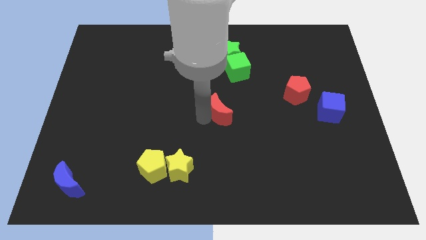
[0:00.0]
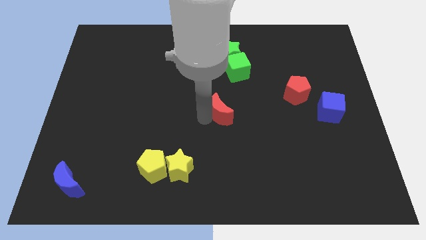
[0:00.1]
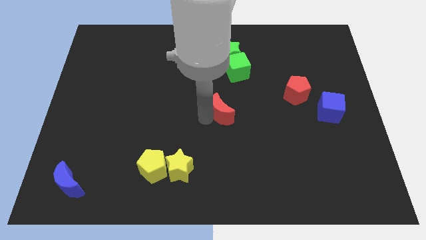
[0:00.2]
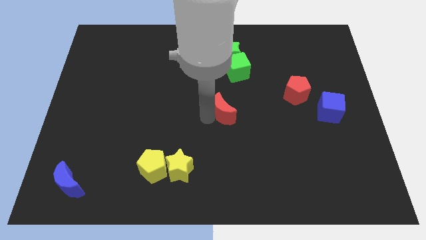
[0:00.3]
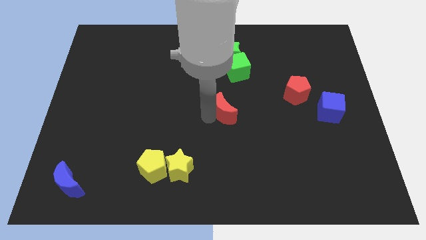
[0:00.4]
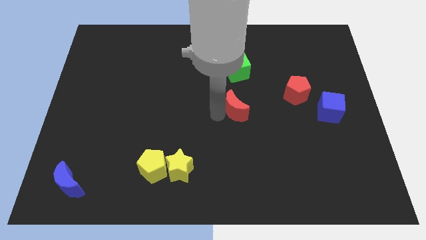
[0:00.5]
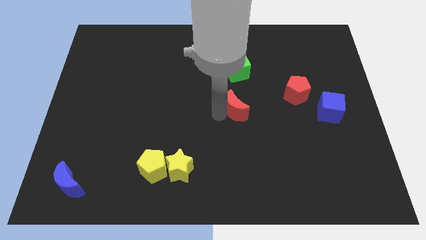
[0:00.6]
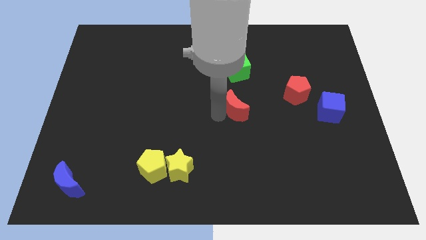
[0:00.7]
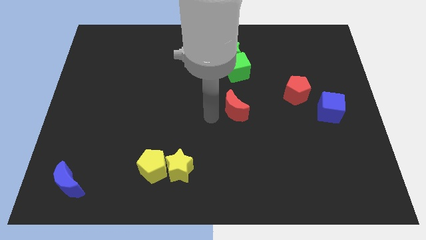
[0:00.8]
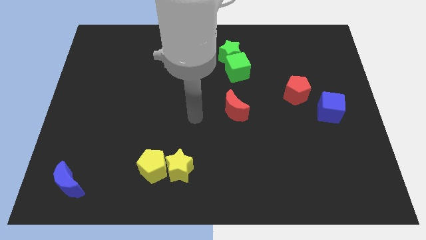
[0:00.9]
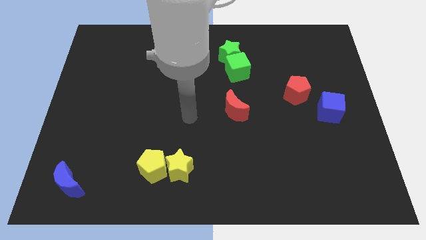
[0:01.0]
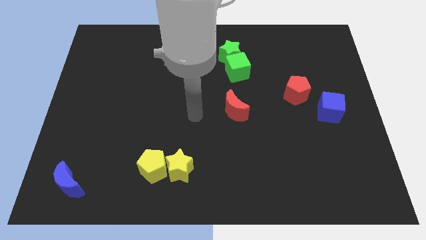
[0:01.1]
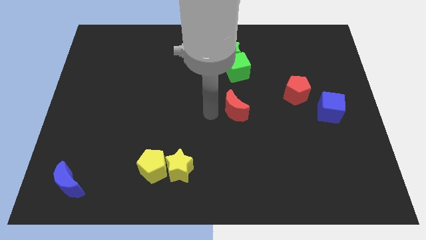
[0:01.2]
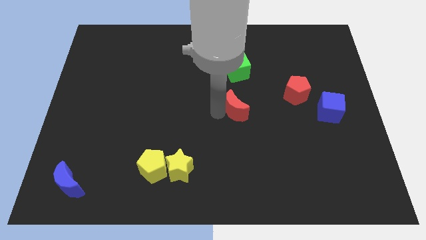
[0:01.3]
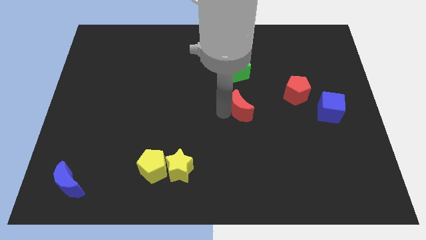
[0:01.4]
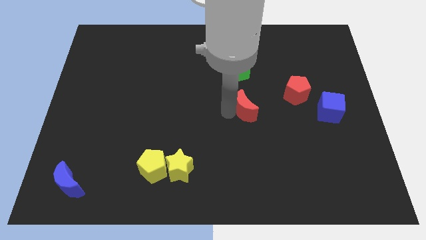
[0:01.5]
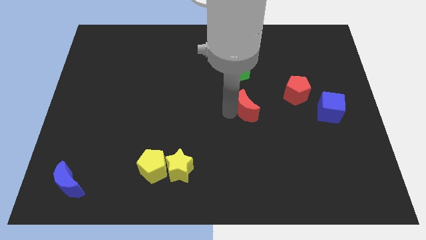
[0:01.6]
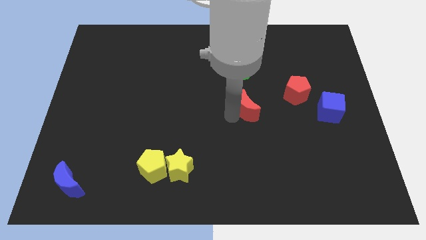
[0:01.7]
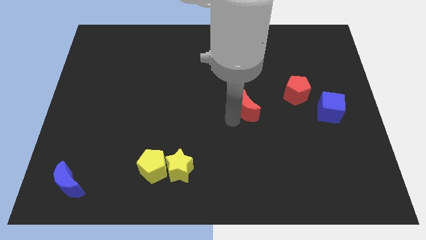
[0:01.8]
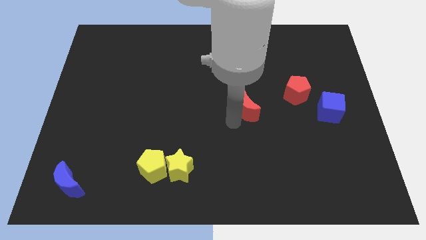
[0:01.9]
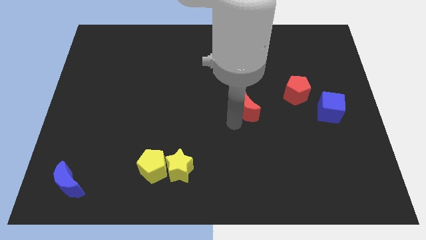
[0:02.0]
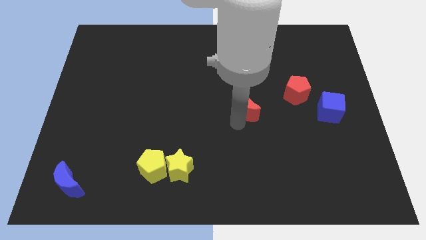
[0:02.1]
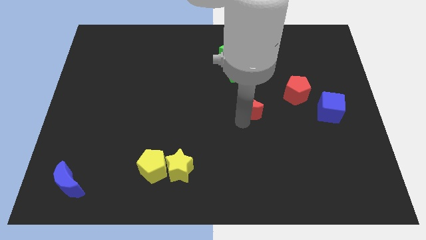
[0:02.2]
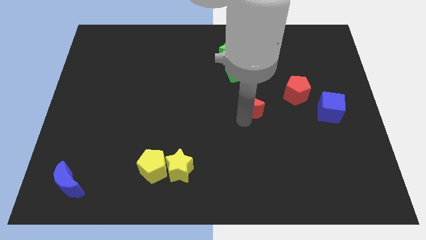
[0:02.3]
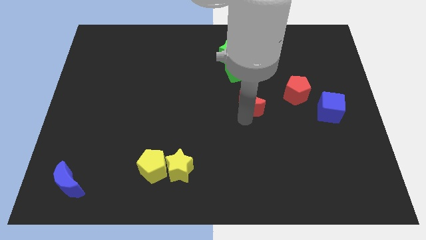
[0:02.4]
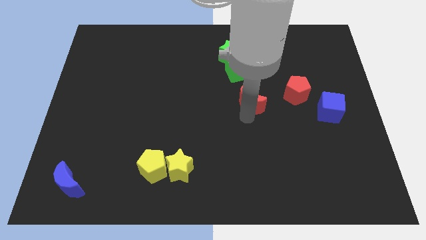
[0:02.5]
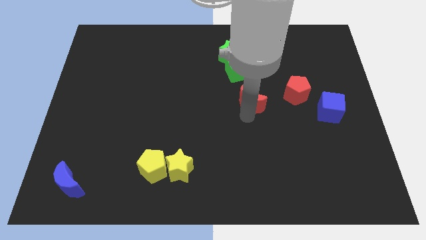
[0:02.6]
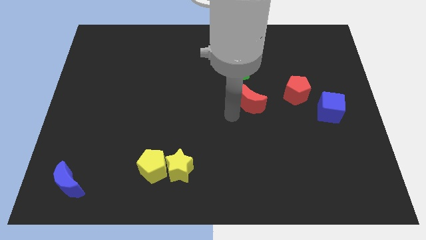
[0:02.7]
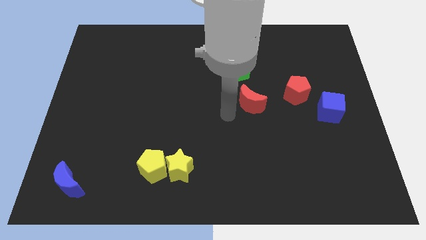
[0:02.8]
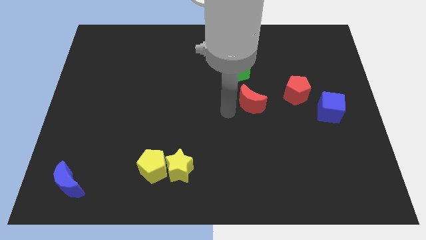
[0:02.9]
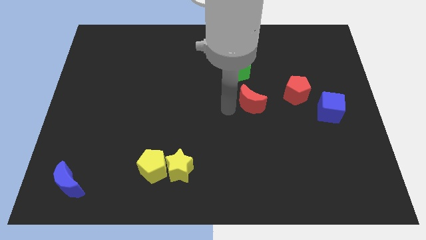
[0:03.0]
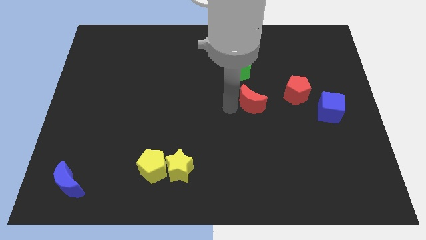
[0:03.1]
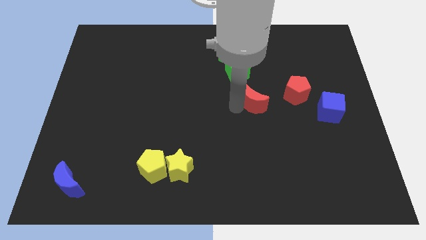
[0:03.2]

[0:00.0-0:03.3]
push the red crescent towards the red pentagon

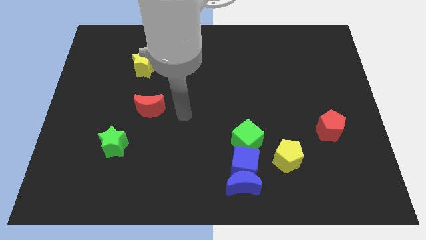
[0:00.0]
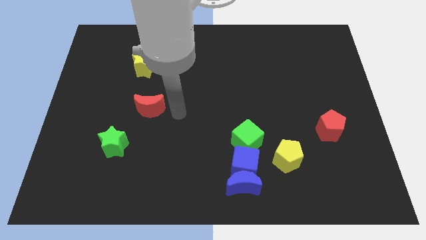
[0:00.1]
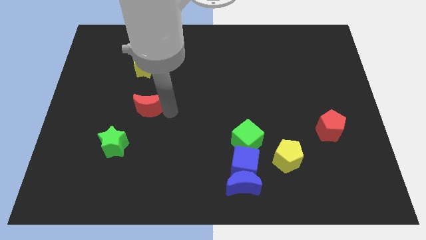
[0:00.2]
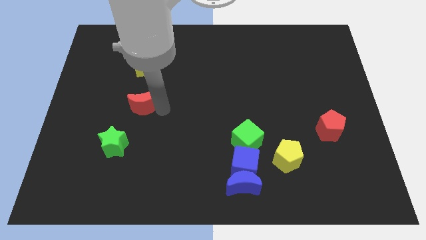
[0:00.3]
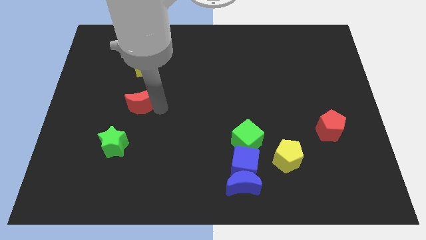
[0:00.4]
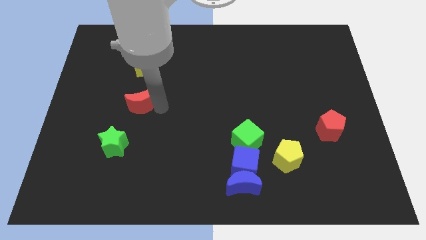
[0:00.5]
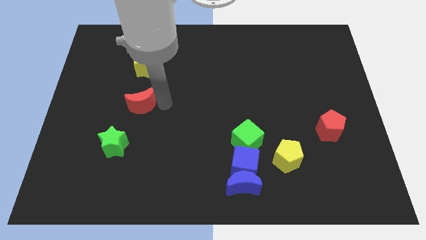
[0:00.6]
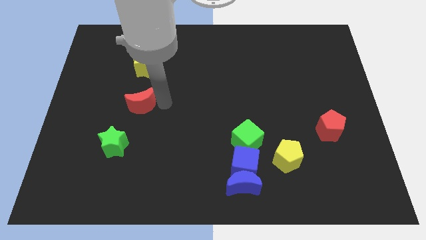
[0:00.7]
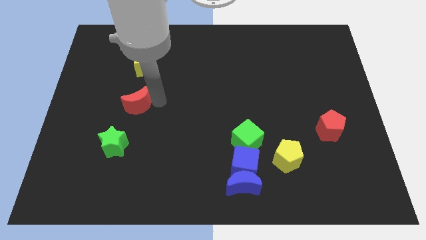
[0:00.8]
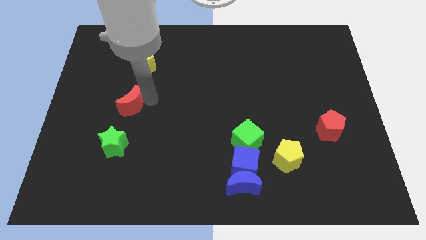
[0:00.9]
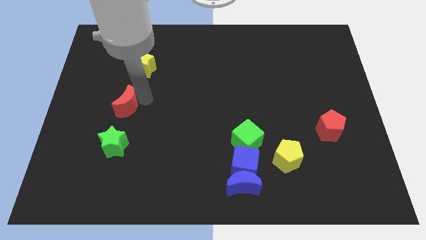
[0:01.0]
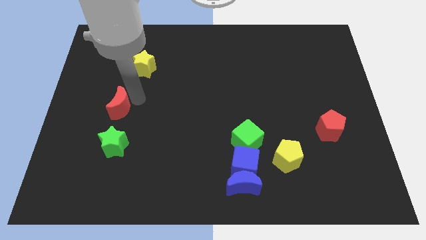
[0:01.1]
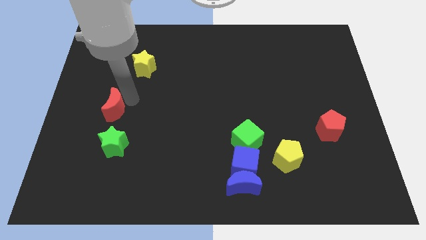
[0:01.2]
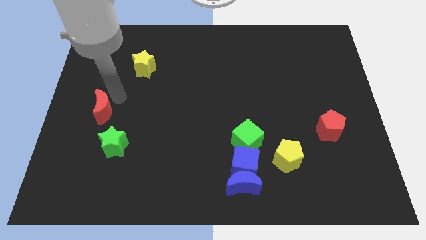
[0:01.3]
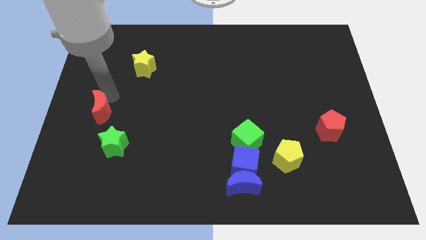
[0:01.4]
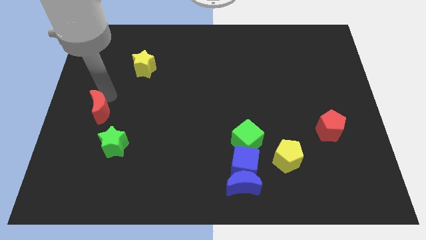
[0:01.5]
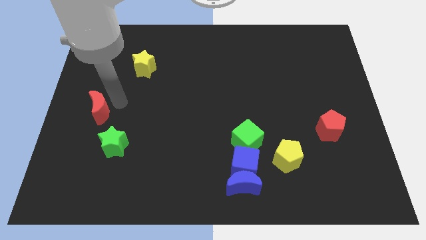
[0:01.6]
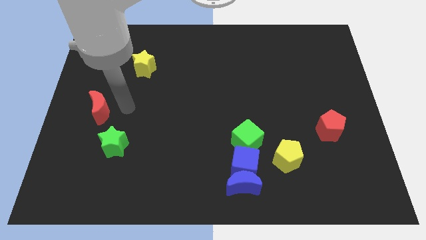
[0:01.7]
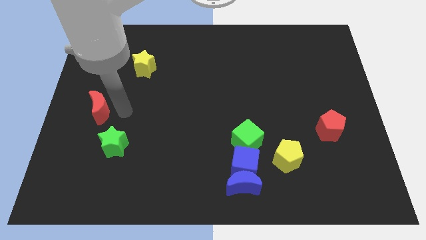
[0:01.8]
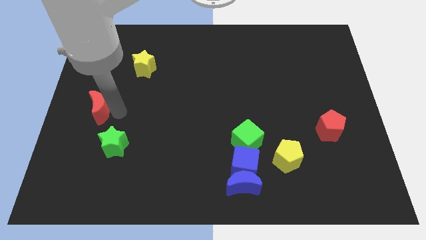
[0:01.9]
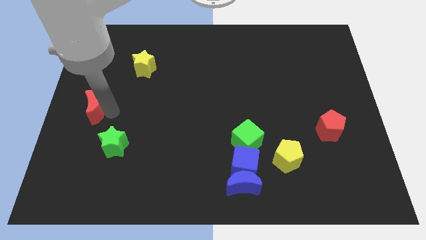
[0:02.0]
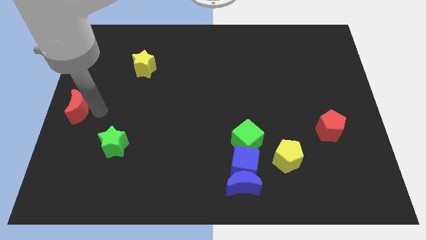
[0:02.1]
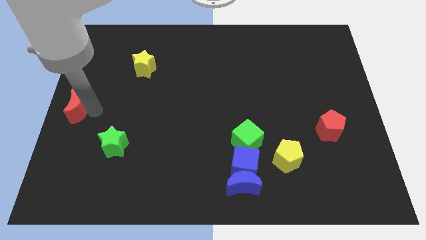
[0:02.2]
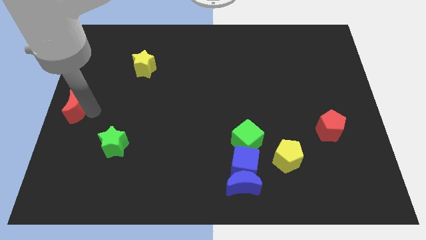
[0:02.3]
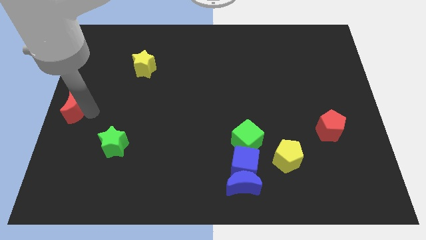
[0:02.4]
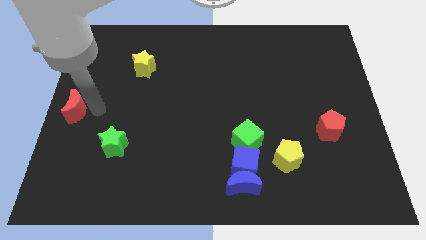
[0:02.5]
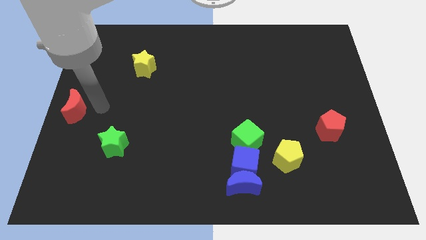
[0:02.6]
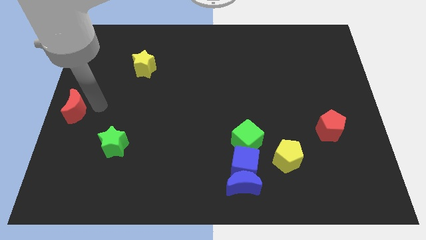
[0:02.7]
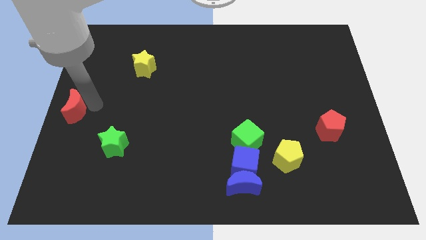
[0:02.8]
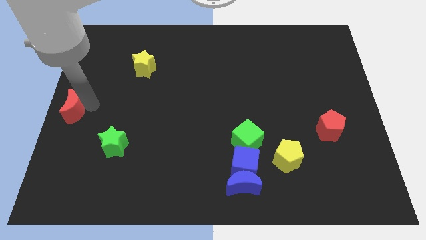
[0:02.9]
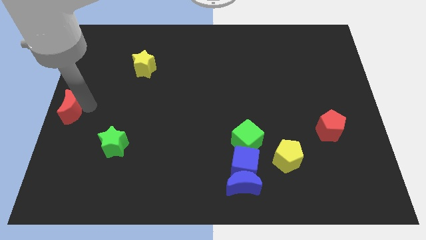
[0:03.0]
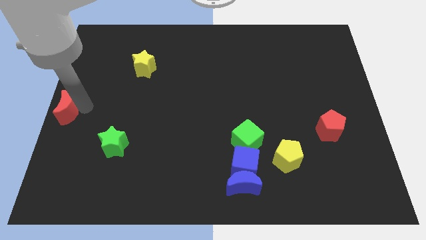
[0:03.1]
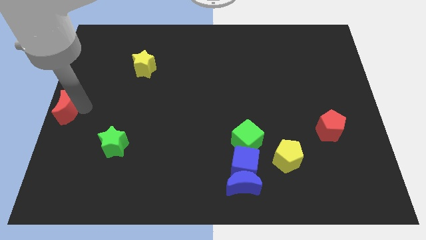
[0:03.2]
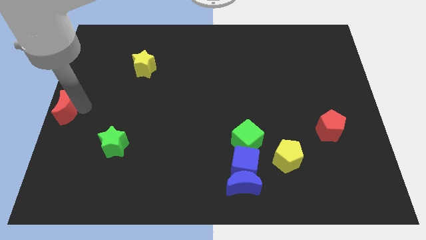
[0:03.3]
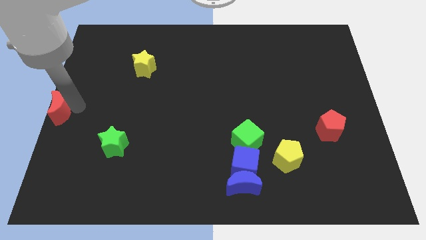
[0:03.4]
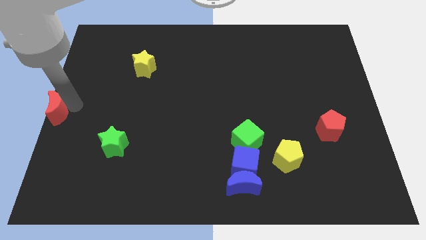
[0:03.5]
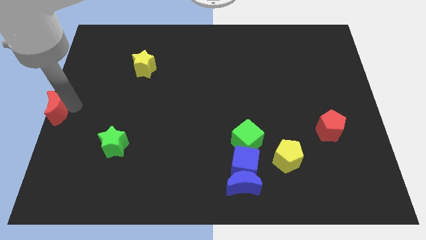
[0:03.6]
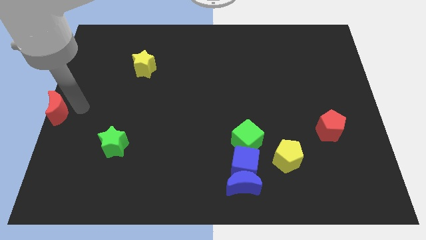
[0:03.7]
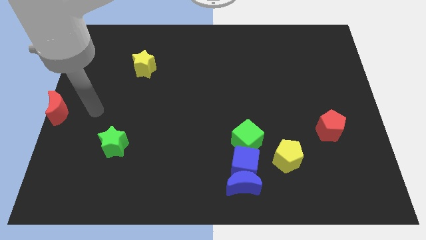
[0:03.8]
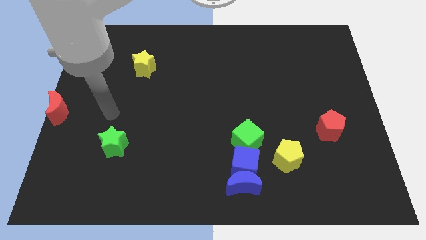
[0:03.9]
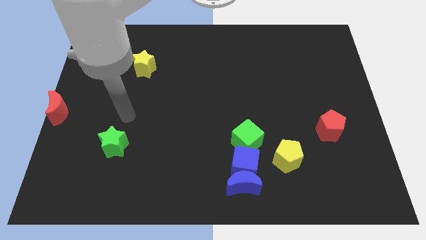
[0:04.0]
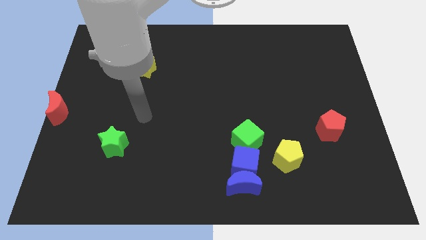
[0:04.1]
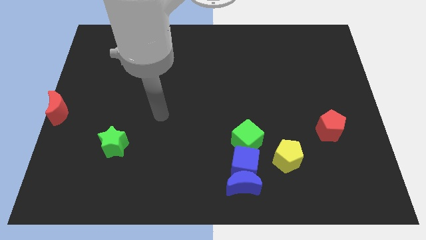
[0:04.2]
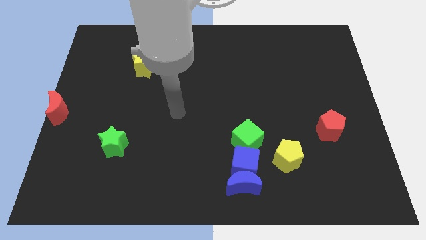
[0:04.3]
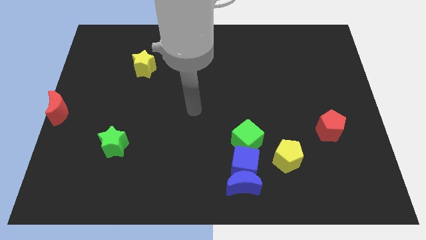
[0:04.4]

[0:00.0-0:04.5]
move the red moon to the center left

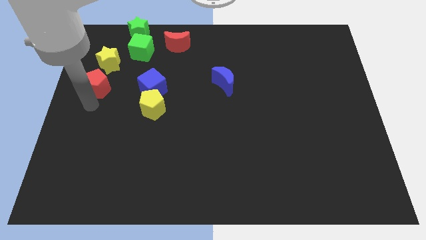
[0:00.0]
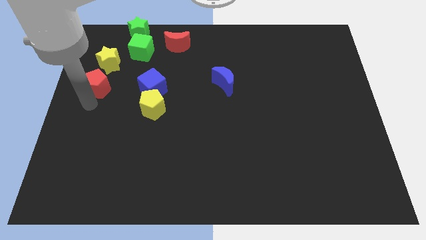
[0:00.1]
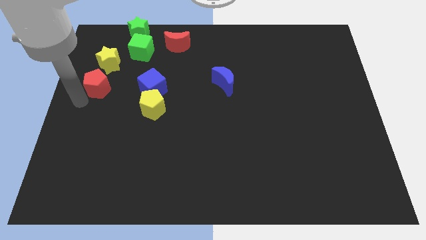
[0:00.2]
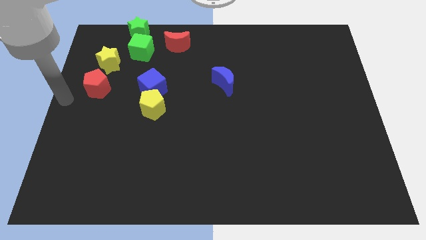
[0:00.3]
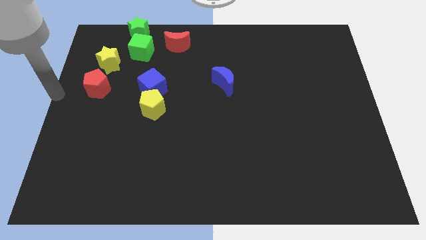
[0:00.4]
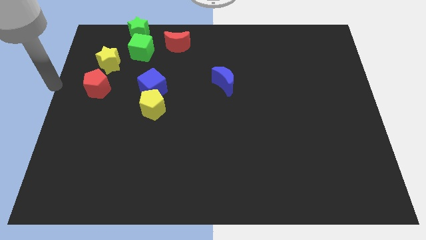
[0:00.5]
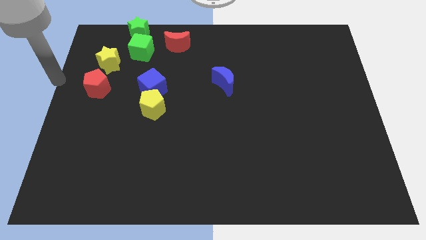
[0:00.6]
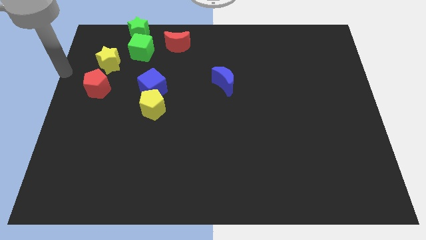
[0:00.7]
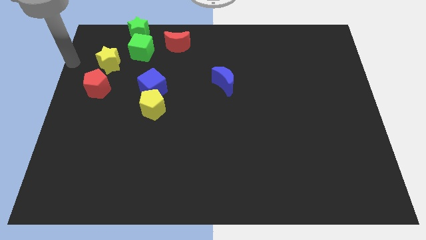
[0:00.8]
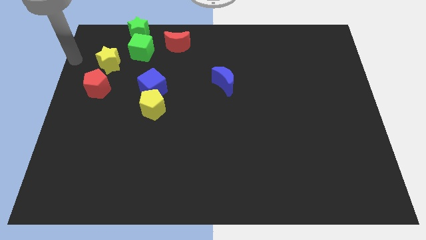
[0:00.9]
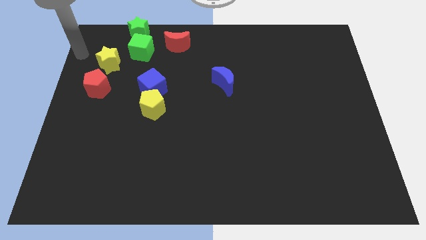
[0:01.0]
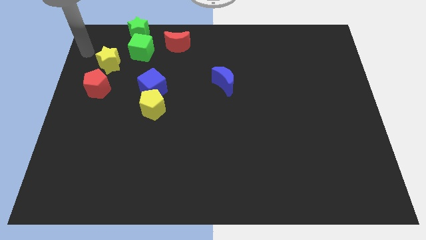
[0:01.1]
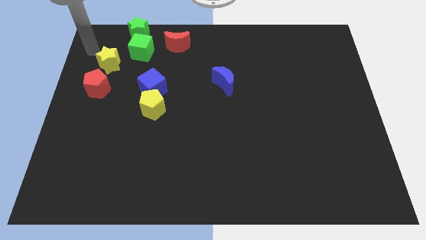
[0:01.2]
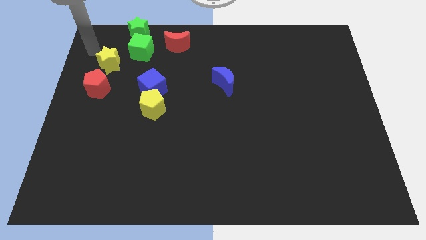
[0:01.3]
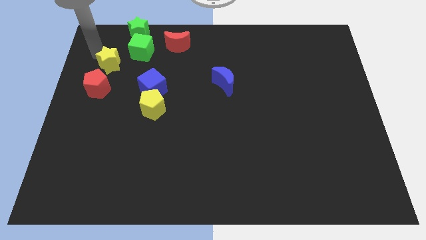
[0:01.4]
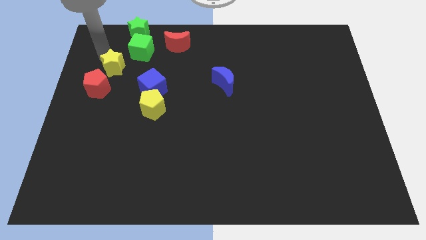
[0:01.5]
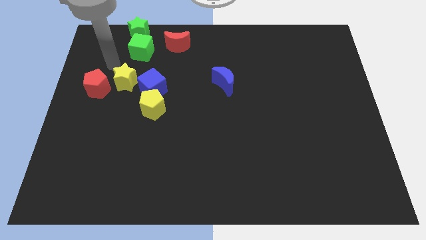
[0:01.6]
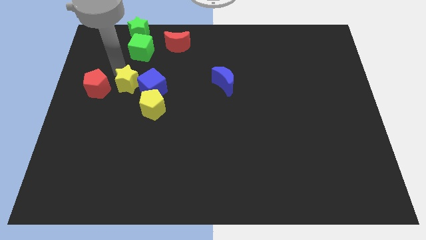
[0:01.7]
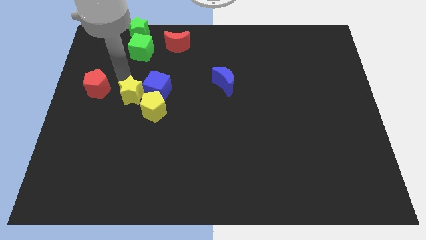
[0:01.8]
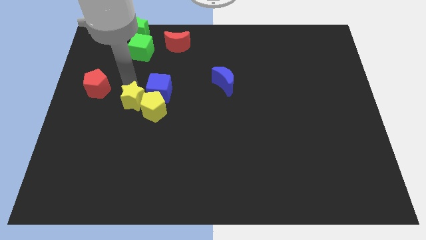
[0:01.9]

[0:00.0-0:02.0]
move the yellow star into the yellow pentagon
